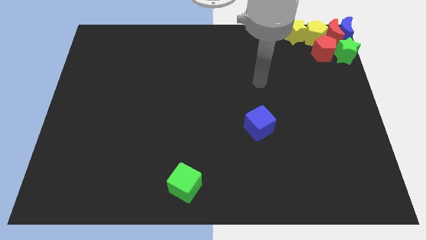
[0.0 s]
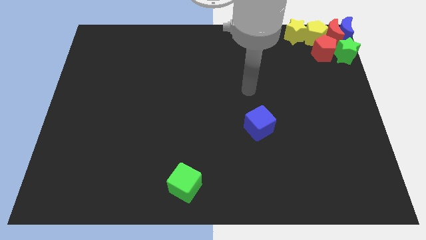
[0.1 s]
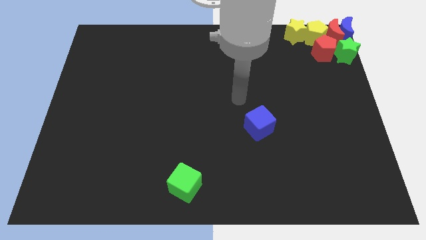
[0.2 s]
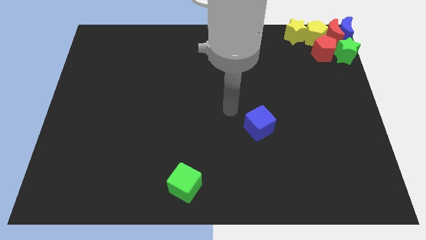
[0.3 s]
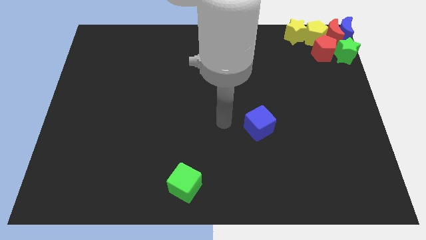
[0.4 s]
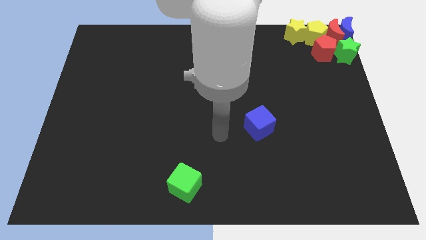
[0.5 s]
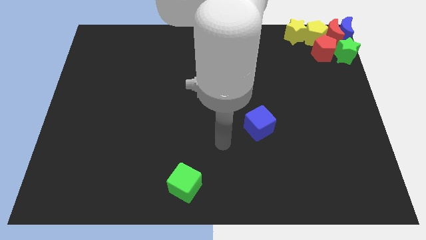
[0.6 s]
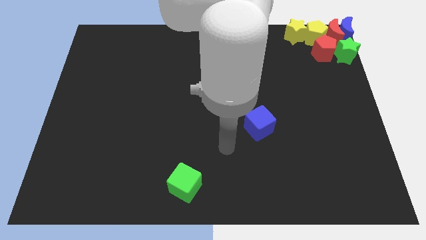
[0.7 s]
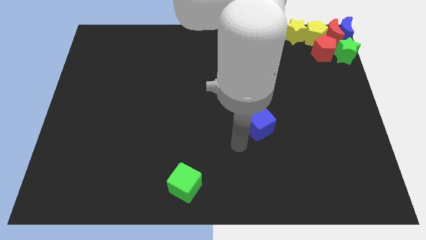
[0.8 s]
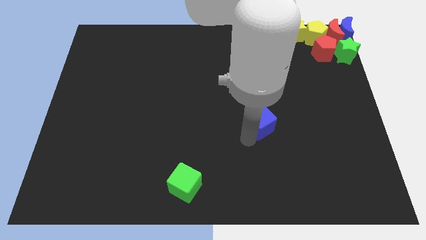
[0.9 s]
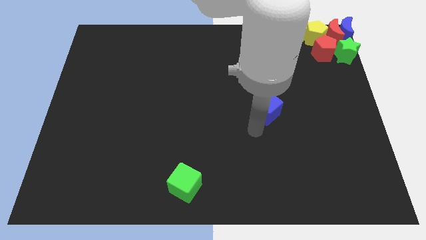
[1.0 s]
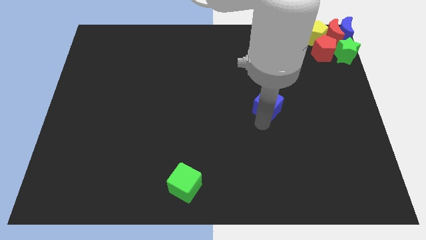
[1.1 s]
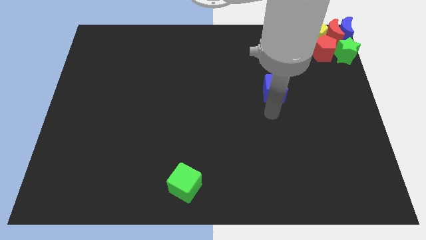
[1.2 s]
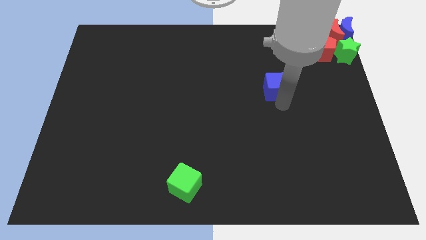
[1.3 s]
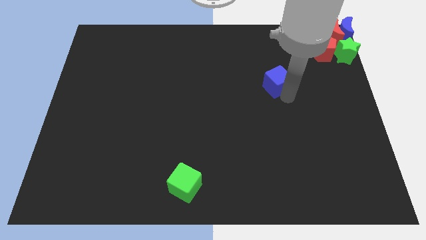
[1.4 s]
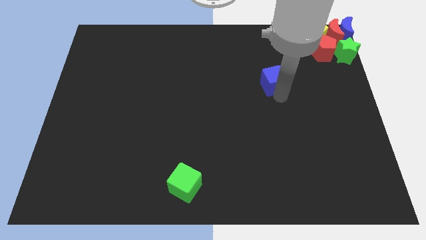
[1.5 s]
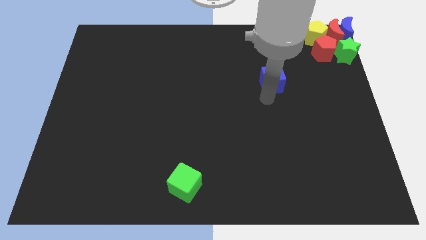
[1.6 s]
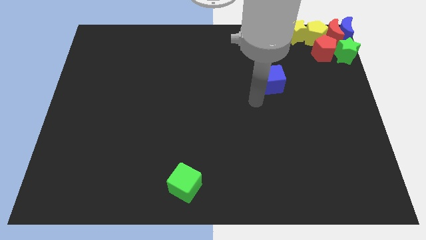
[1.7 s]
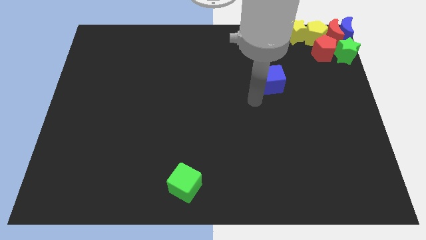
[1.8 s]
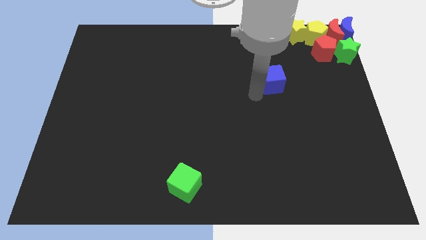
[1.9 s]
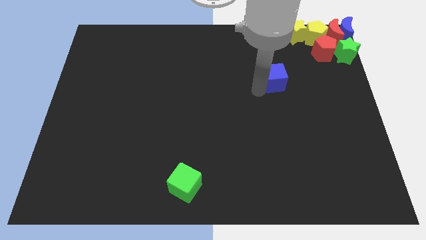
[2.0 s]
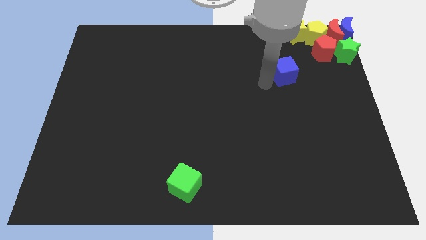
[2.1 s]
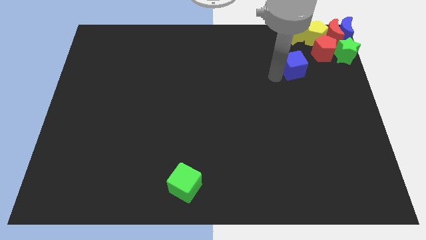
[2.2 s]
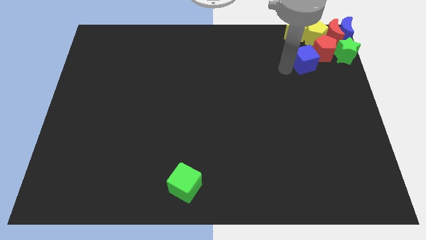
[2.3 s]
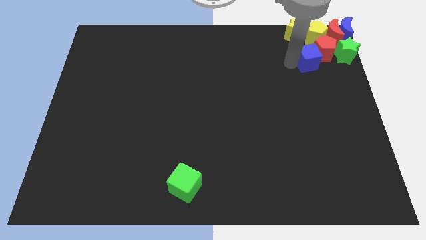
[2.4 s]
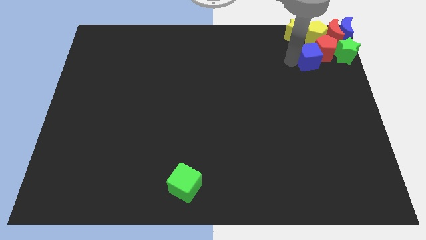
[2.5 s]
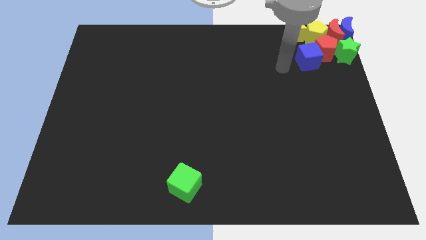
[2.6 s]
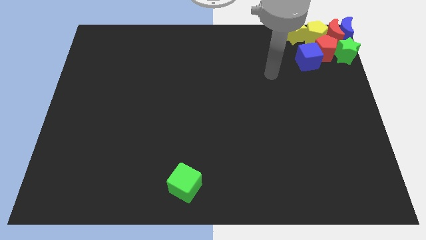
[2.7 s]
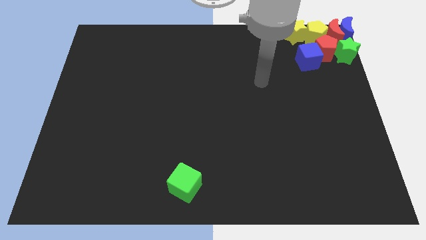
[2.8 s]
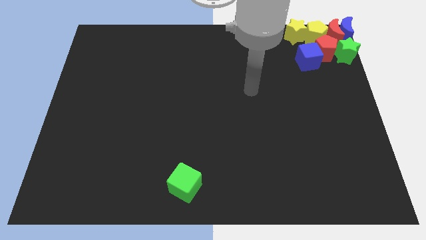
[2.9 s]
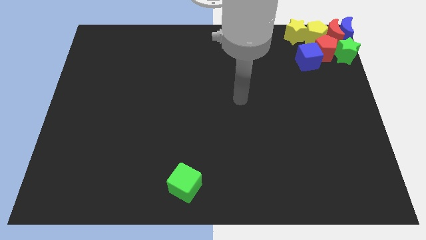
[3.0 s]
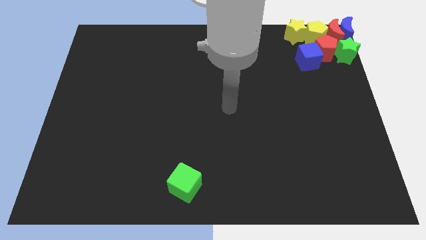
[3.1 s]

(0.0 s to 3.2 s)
move the blue cube into the red pentagon

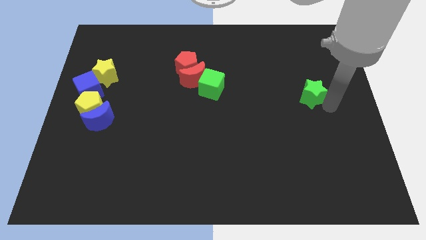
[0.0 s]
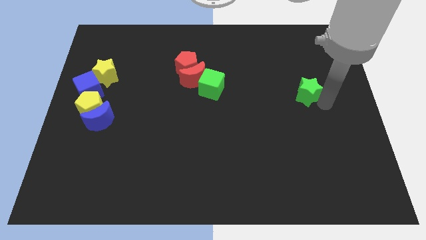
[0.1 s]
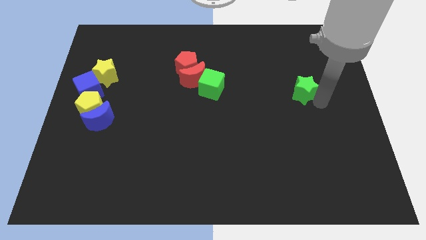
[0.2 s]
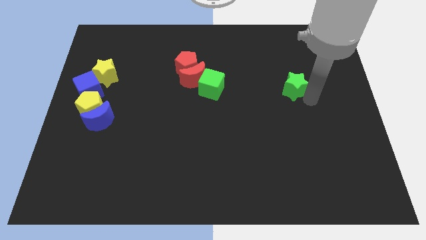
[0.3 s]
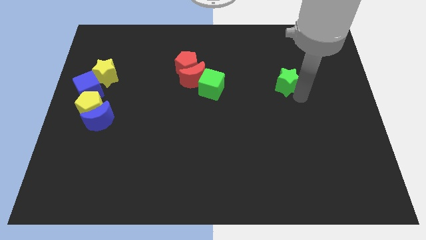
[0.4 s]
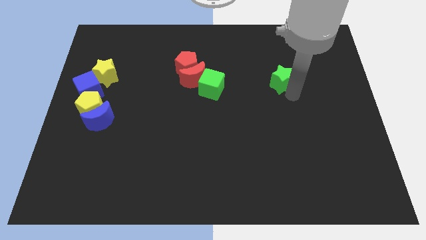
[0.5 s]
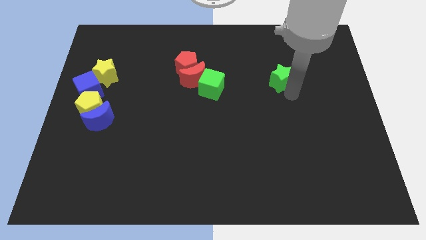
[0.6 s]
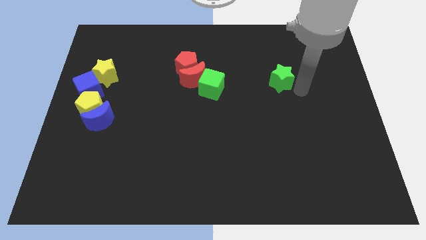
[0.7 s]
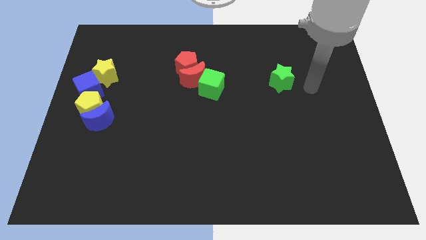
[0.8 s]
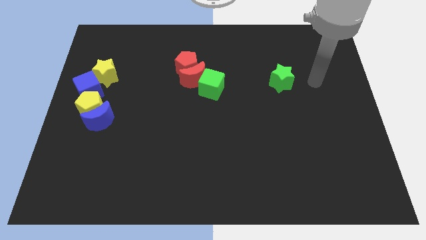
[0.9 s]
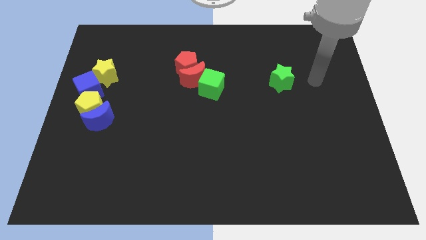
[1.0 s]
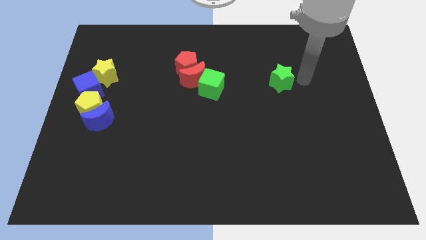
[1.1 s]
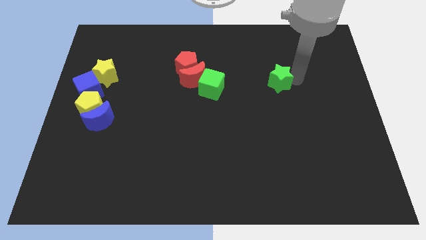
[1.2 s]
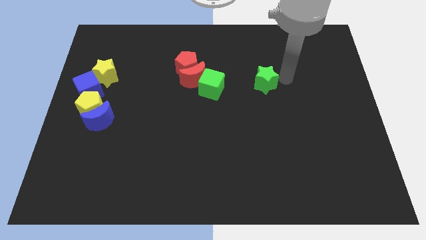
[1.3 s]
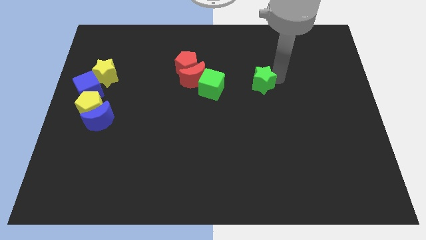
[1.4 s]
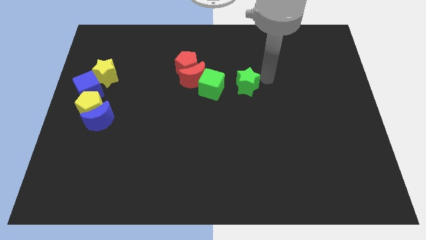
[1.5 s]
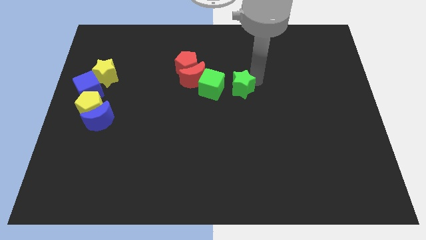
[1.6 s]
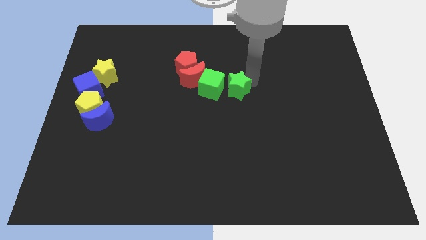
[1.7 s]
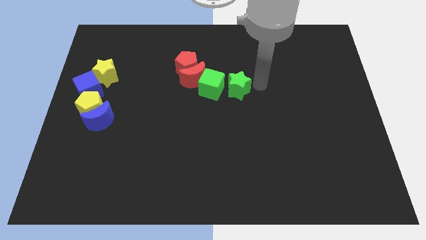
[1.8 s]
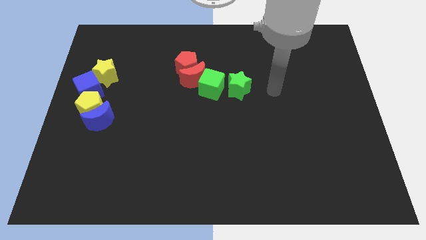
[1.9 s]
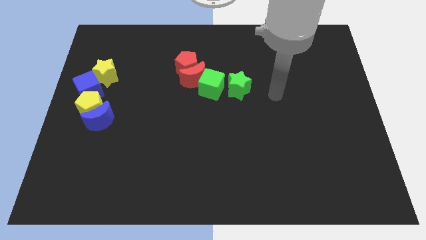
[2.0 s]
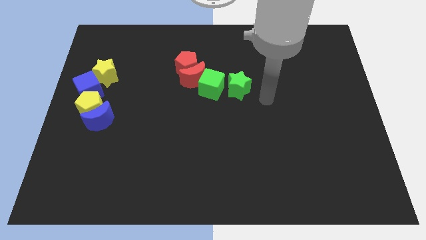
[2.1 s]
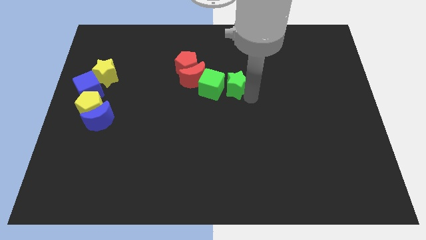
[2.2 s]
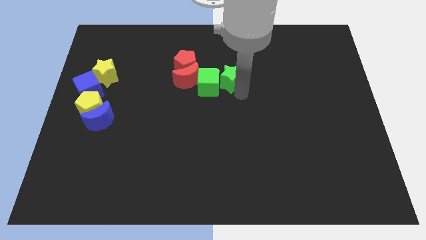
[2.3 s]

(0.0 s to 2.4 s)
drag the green star beside the blue cube

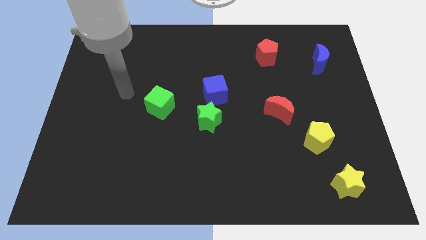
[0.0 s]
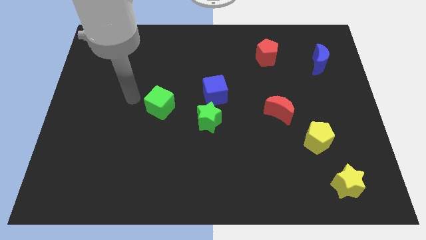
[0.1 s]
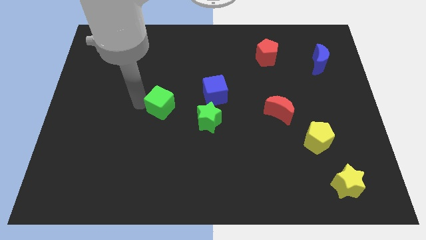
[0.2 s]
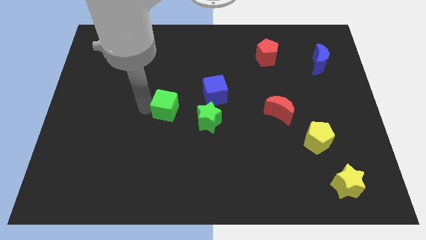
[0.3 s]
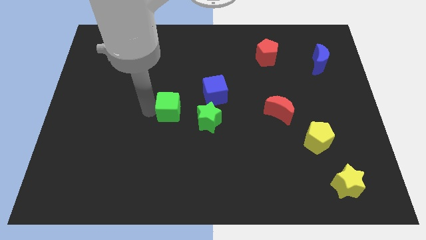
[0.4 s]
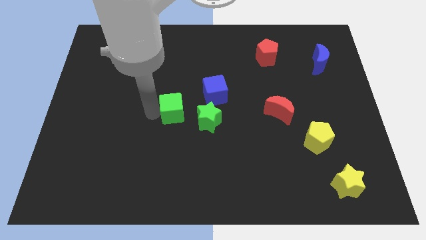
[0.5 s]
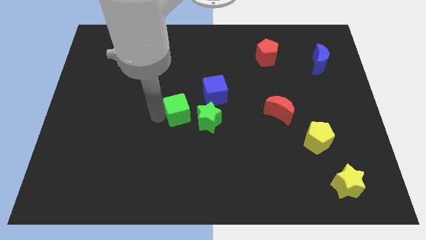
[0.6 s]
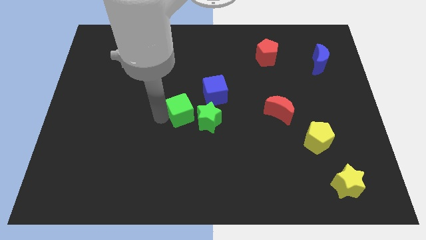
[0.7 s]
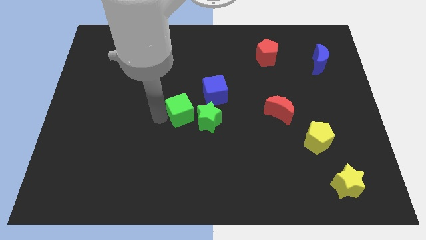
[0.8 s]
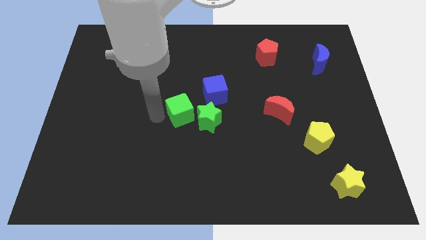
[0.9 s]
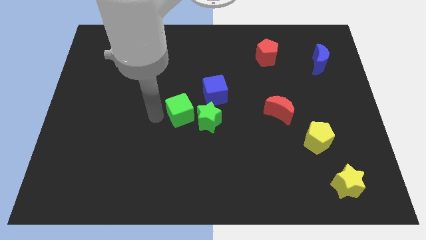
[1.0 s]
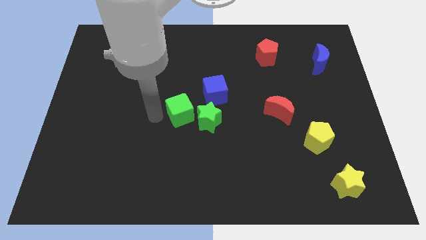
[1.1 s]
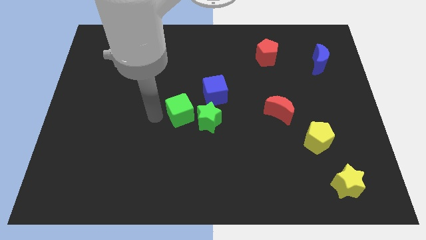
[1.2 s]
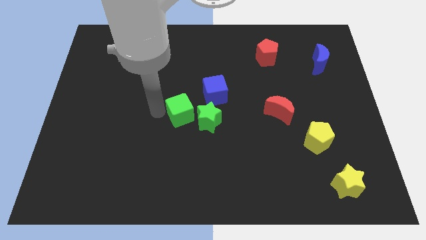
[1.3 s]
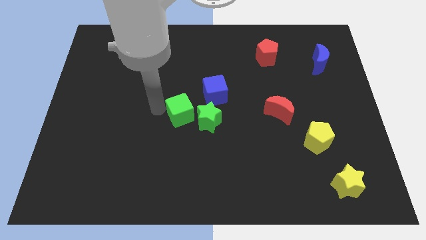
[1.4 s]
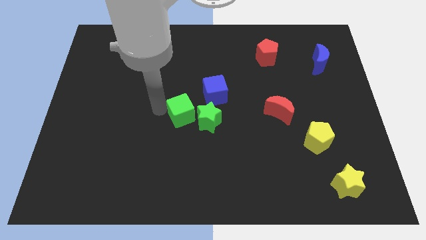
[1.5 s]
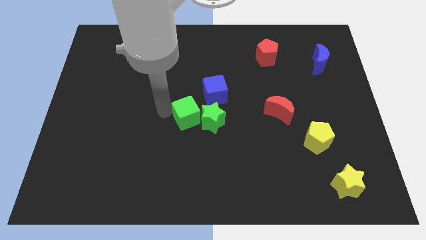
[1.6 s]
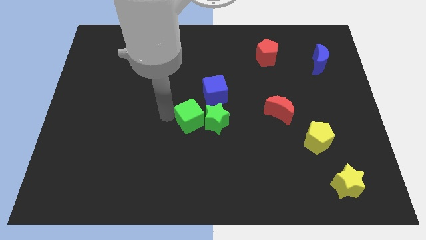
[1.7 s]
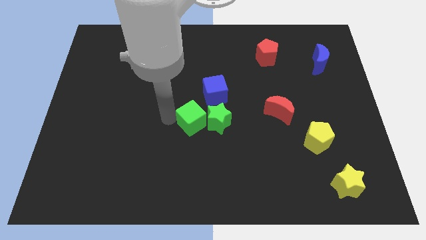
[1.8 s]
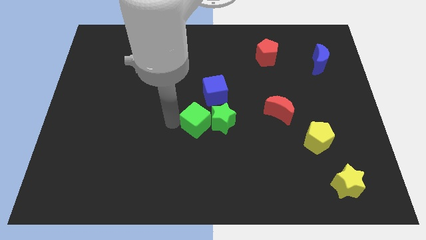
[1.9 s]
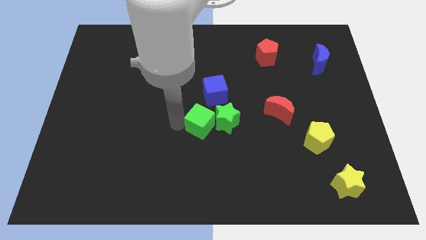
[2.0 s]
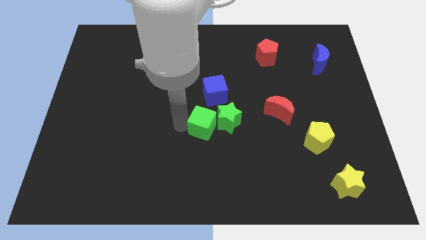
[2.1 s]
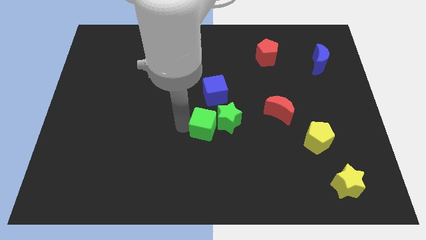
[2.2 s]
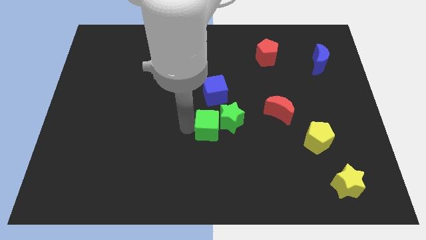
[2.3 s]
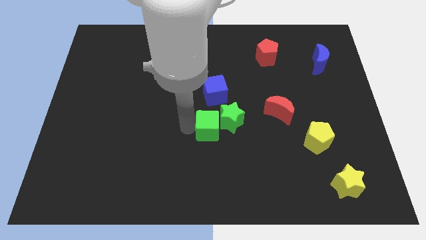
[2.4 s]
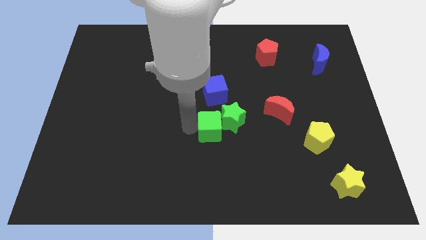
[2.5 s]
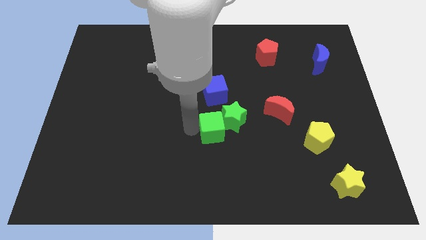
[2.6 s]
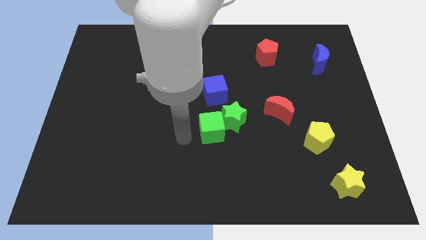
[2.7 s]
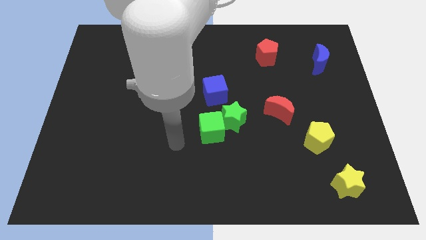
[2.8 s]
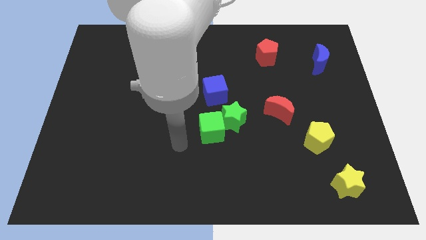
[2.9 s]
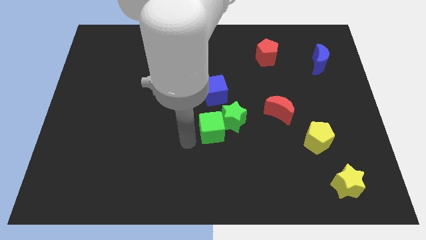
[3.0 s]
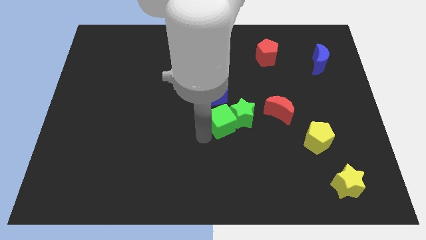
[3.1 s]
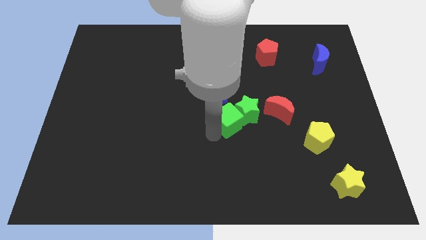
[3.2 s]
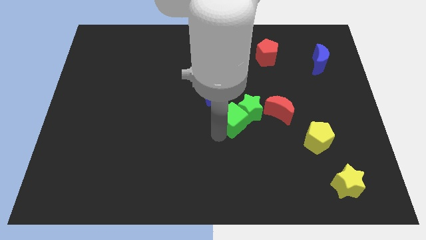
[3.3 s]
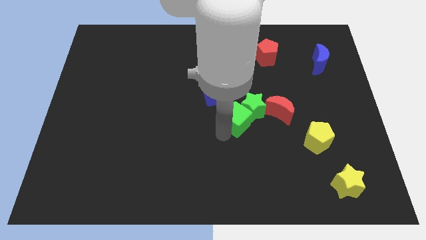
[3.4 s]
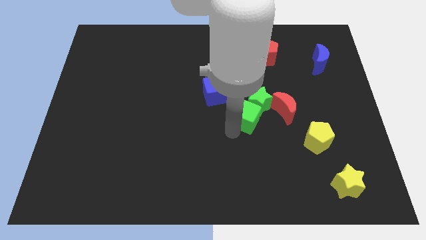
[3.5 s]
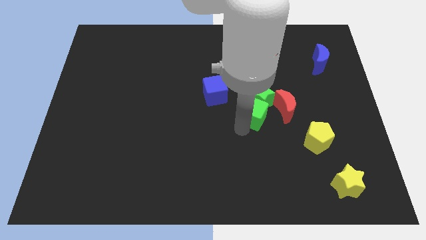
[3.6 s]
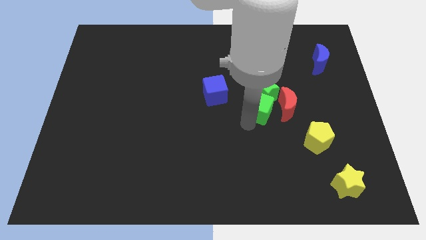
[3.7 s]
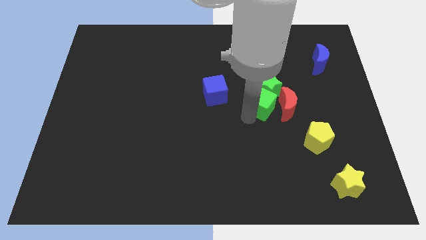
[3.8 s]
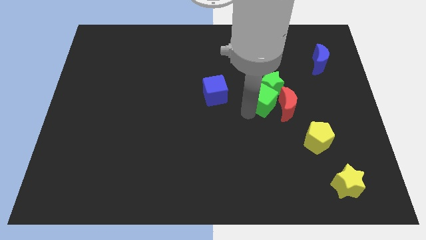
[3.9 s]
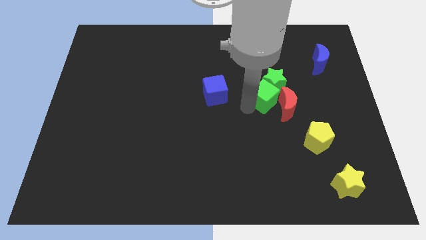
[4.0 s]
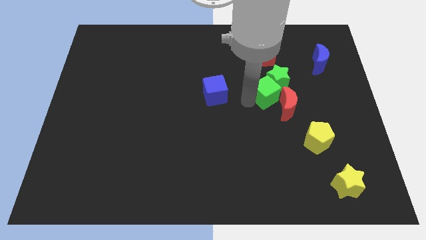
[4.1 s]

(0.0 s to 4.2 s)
push the green cube into the green star
